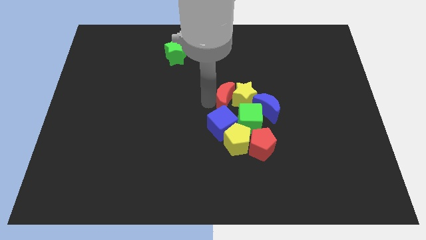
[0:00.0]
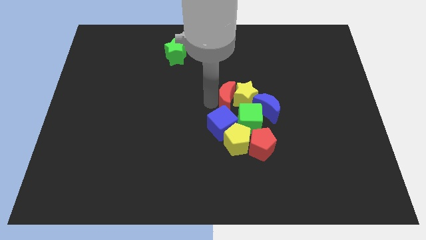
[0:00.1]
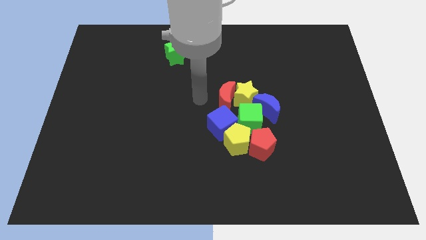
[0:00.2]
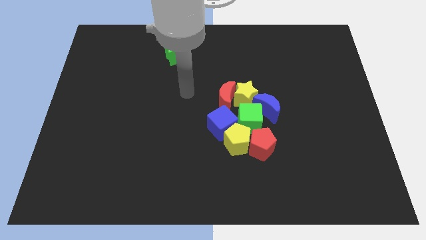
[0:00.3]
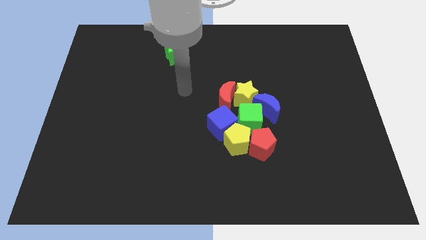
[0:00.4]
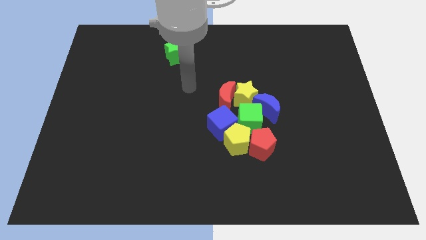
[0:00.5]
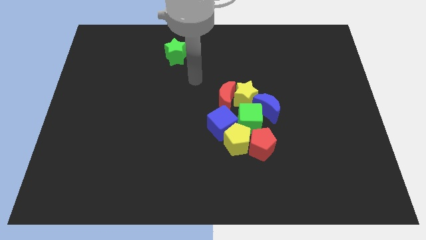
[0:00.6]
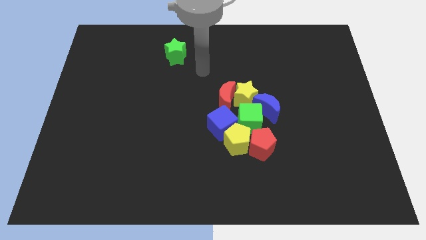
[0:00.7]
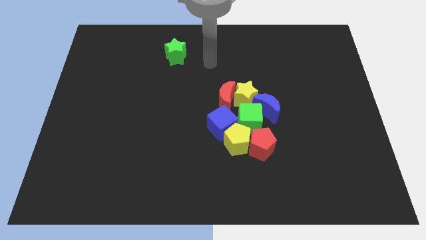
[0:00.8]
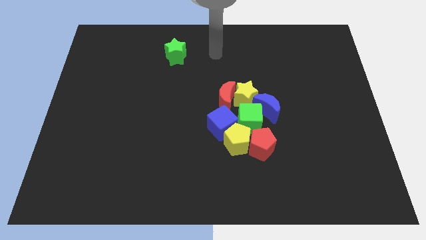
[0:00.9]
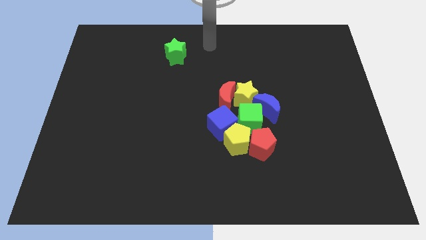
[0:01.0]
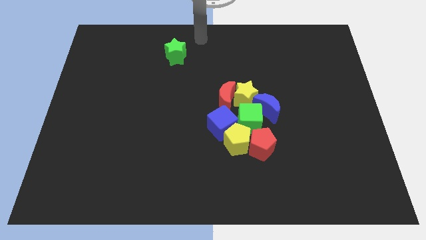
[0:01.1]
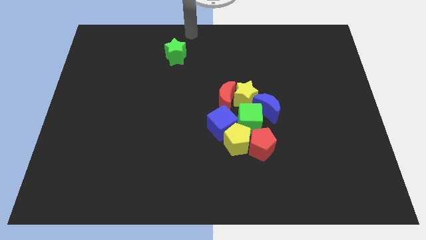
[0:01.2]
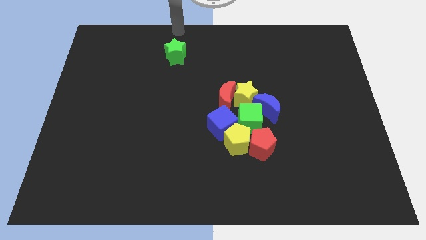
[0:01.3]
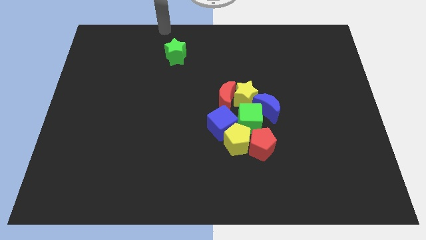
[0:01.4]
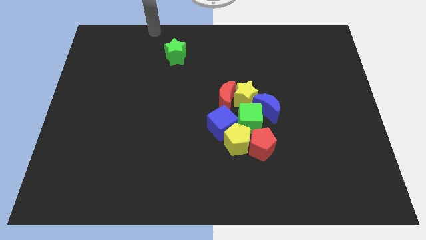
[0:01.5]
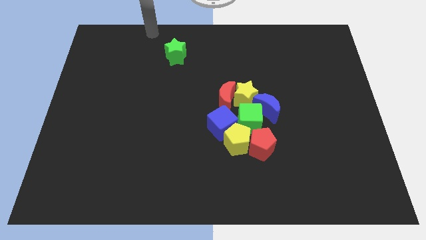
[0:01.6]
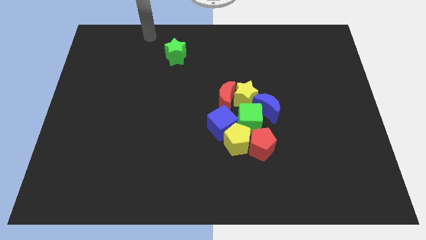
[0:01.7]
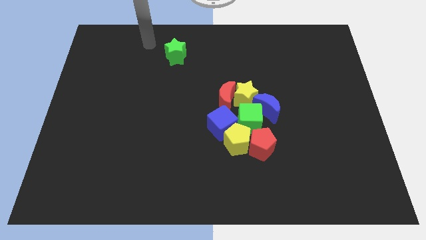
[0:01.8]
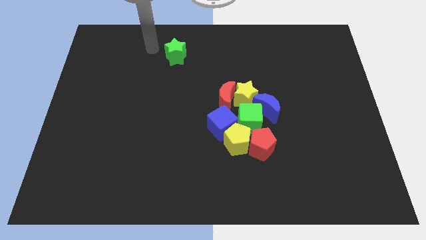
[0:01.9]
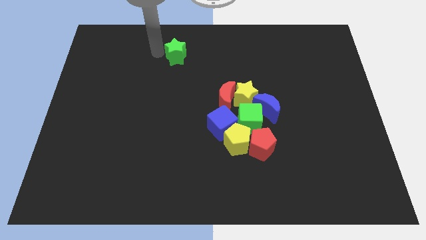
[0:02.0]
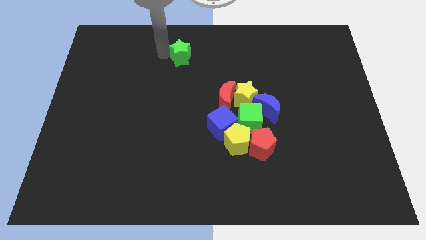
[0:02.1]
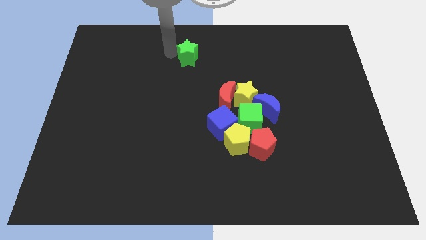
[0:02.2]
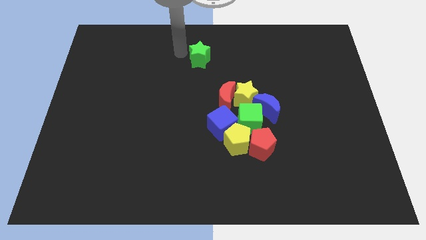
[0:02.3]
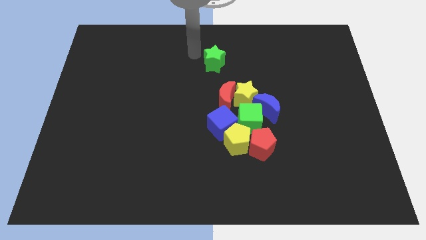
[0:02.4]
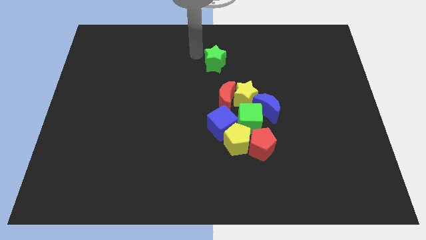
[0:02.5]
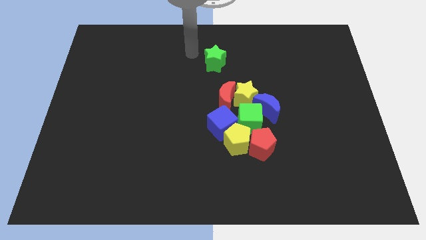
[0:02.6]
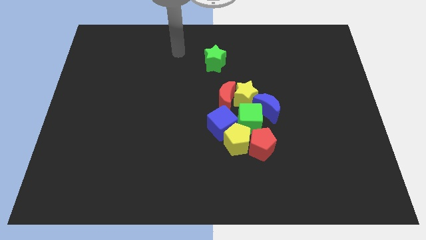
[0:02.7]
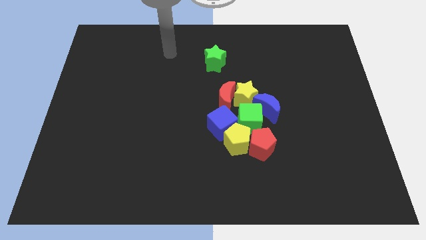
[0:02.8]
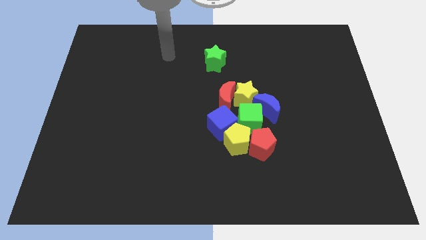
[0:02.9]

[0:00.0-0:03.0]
move the green star towards the center of board

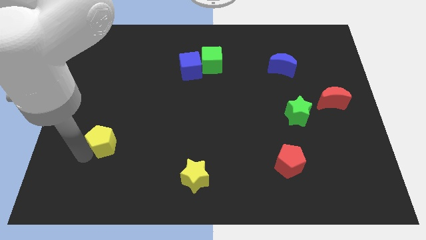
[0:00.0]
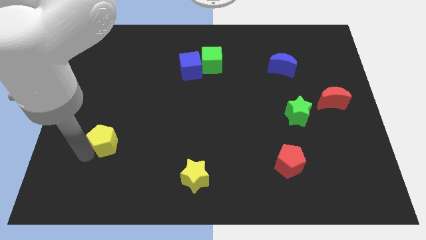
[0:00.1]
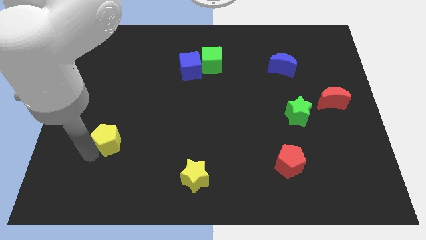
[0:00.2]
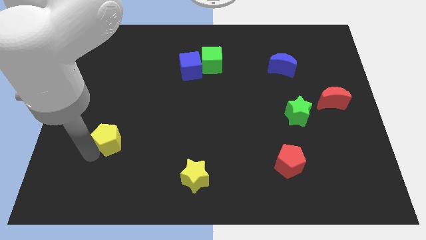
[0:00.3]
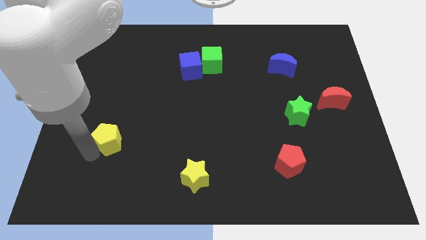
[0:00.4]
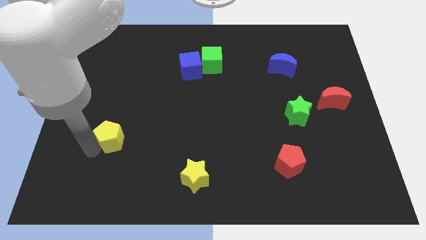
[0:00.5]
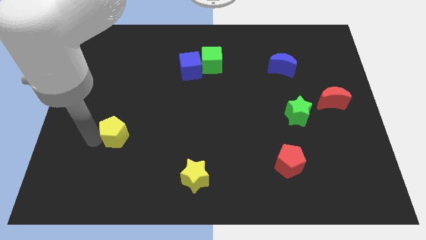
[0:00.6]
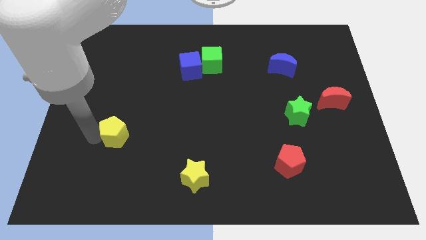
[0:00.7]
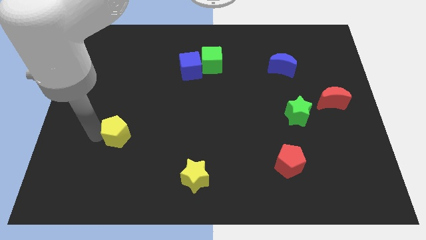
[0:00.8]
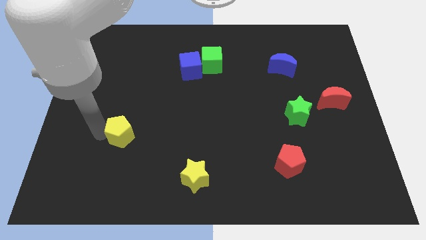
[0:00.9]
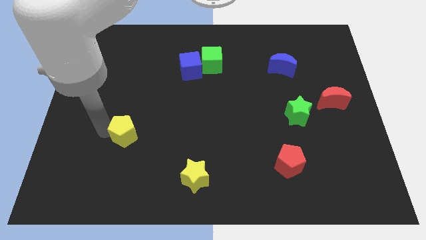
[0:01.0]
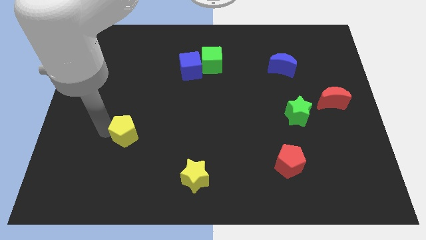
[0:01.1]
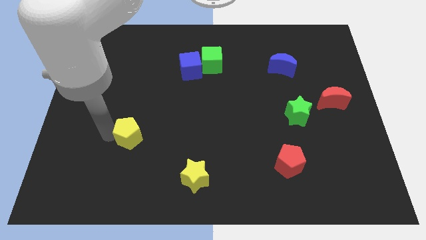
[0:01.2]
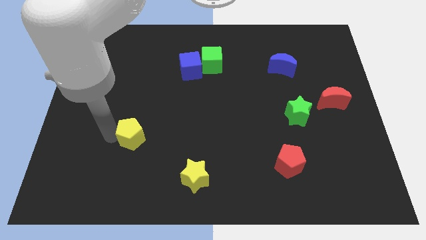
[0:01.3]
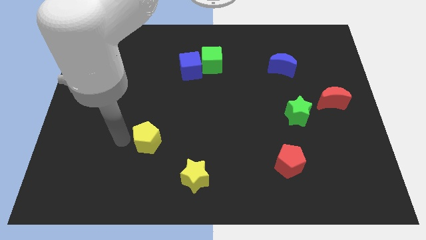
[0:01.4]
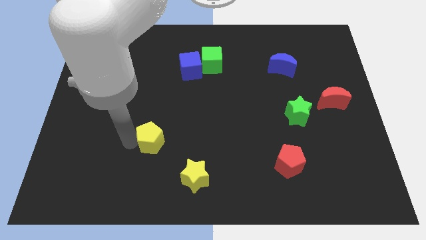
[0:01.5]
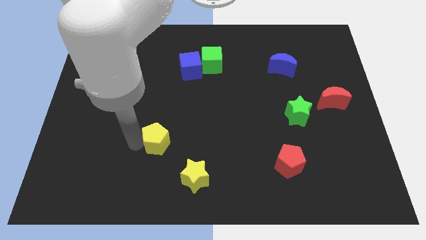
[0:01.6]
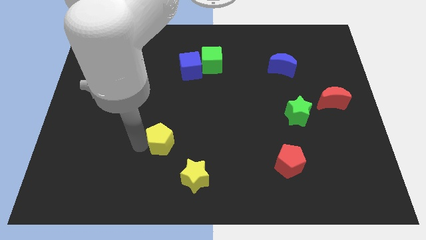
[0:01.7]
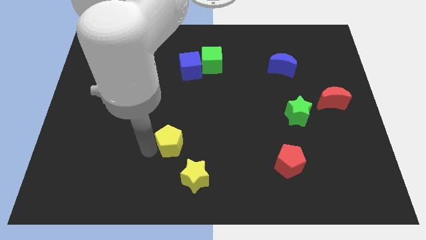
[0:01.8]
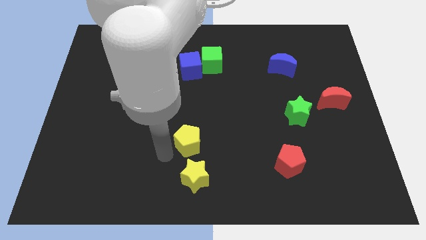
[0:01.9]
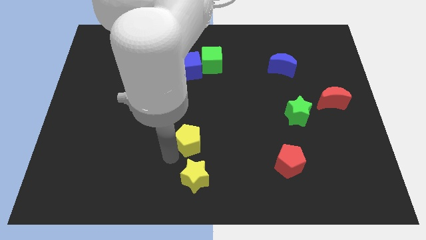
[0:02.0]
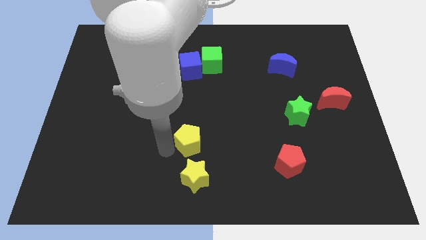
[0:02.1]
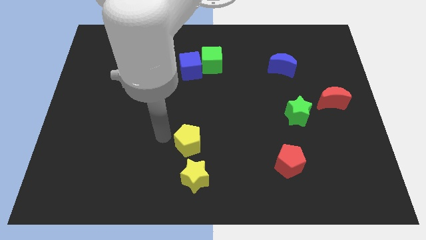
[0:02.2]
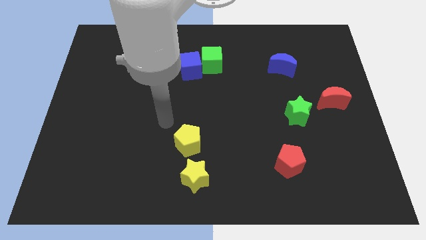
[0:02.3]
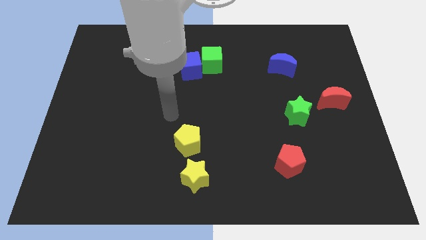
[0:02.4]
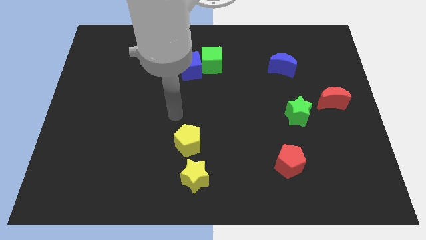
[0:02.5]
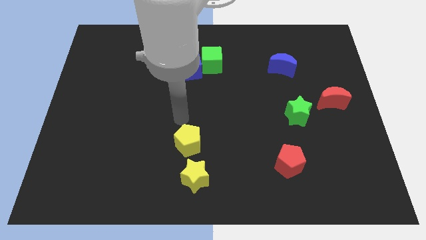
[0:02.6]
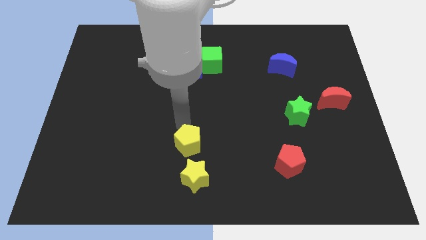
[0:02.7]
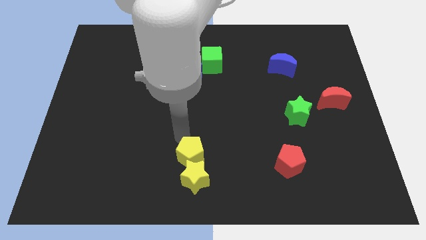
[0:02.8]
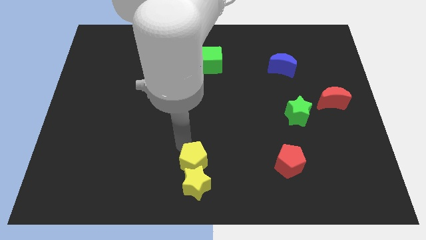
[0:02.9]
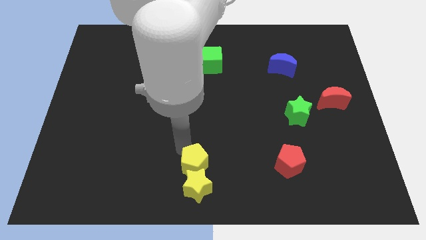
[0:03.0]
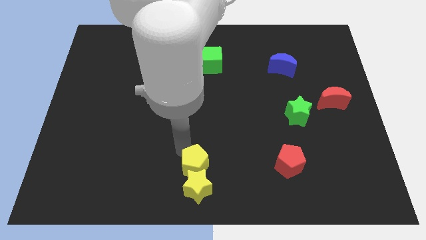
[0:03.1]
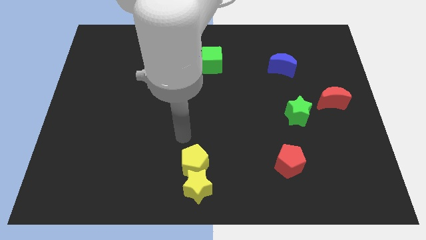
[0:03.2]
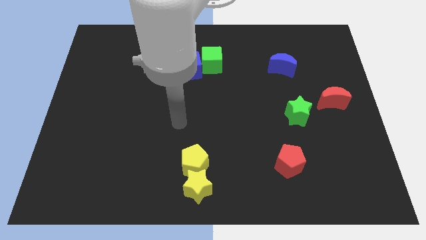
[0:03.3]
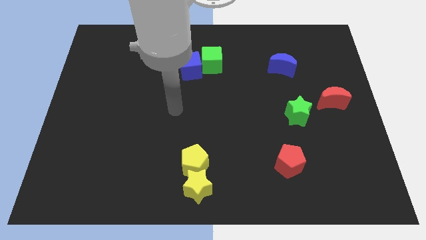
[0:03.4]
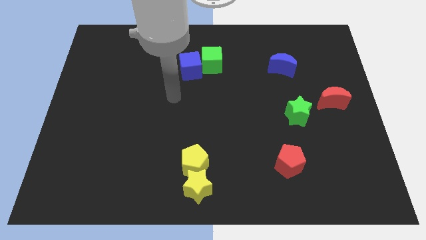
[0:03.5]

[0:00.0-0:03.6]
push the yellow blocks towards the bottom center of the board

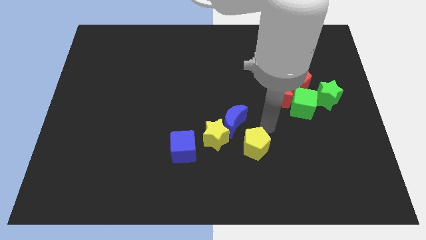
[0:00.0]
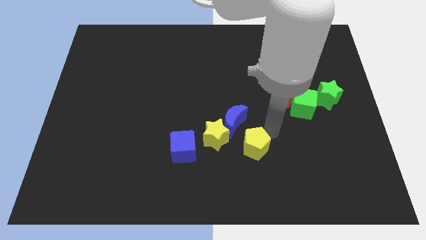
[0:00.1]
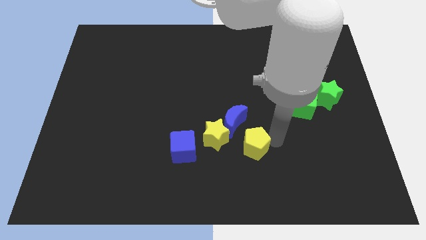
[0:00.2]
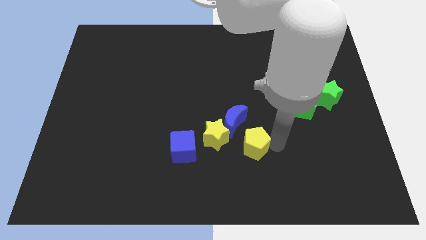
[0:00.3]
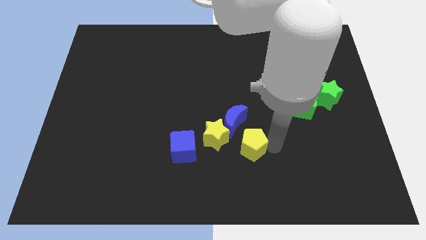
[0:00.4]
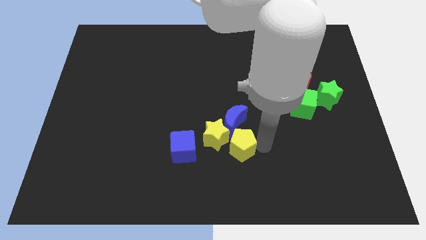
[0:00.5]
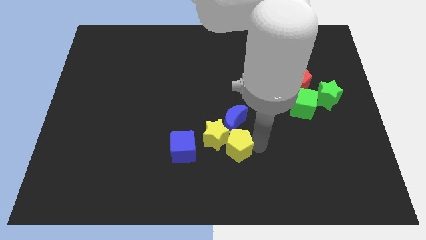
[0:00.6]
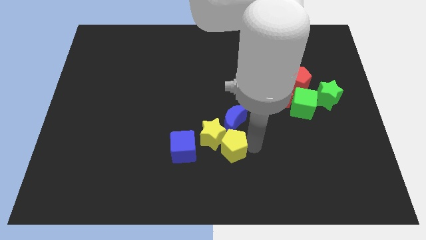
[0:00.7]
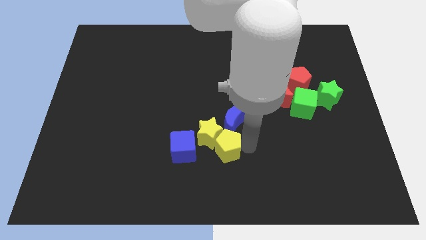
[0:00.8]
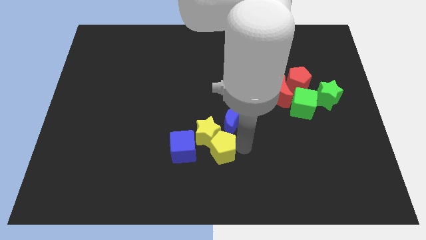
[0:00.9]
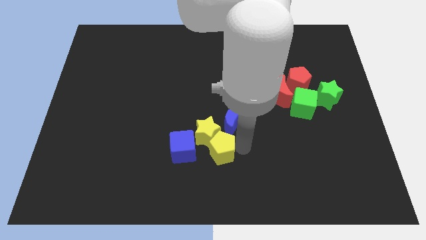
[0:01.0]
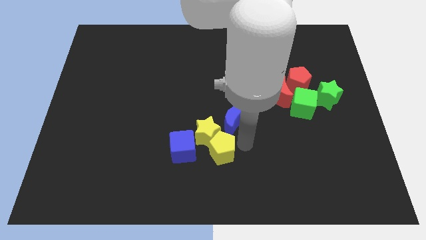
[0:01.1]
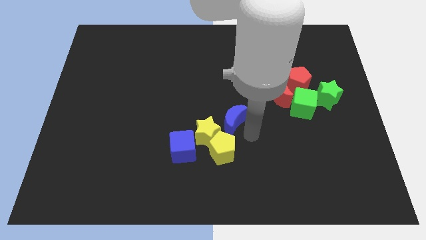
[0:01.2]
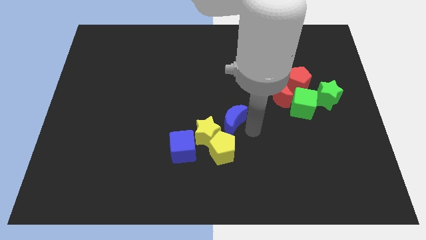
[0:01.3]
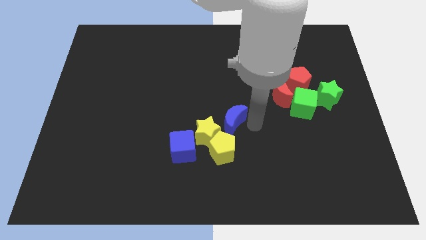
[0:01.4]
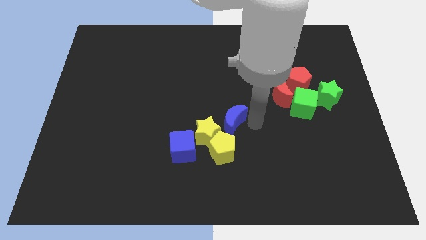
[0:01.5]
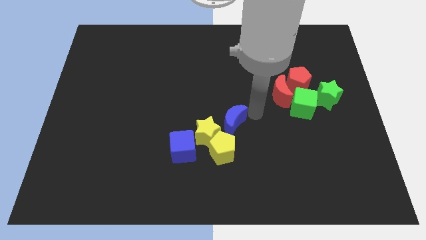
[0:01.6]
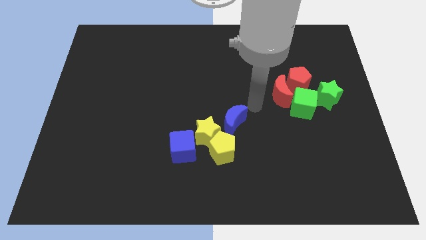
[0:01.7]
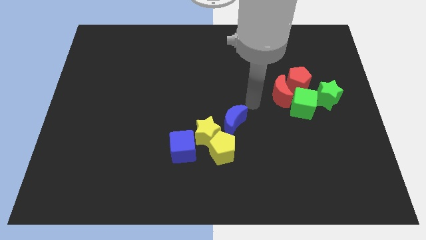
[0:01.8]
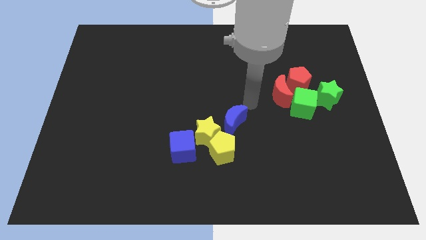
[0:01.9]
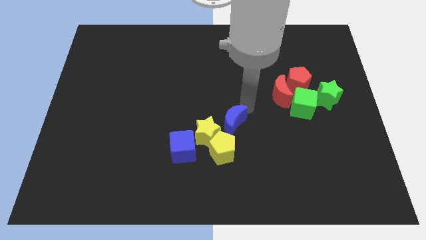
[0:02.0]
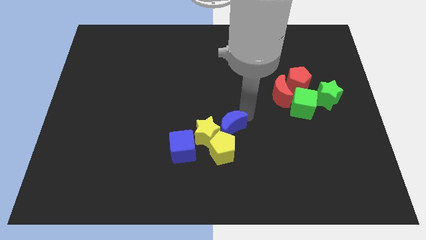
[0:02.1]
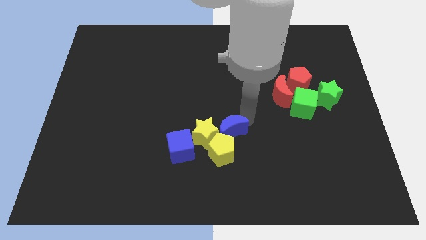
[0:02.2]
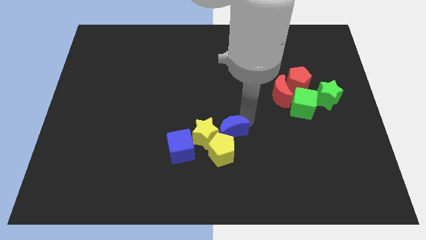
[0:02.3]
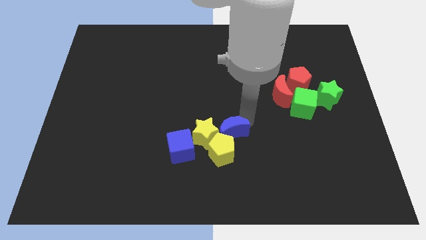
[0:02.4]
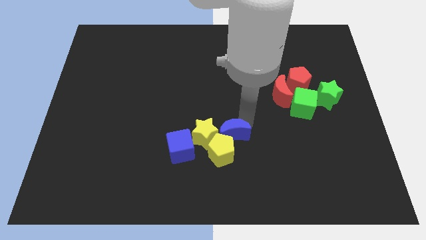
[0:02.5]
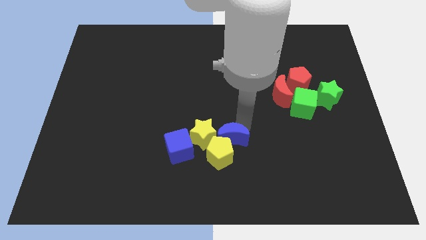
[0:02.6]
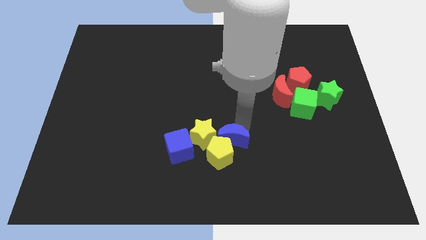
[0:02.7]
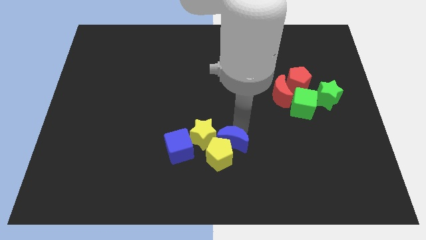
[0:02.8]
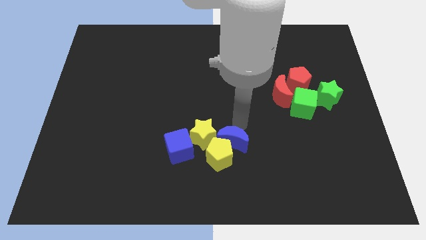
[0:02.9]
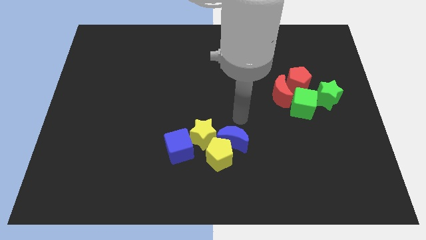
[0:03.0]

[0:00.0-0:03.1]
group up the yellow pentagon yellow star and blue moon together
